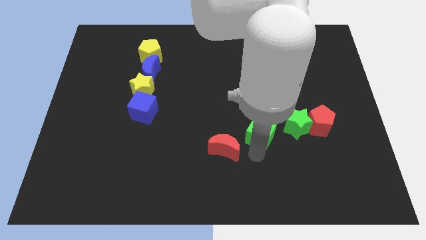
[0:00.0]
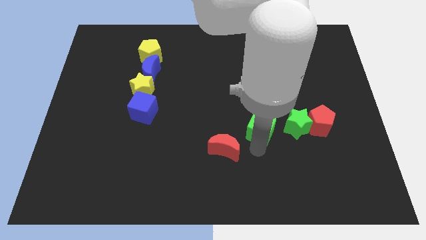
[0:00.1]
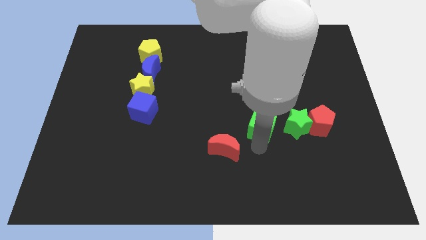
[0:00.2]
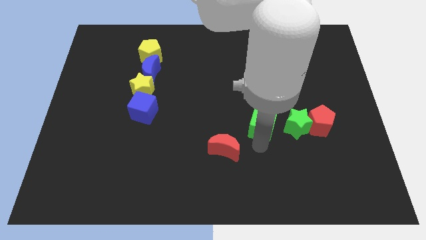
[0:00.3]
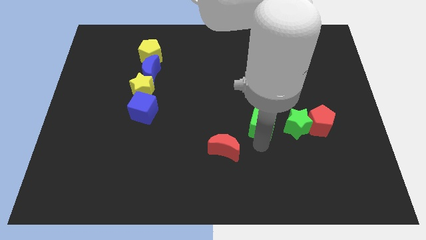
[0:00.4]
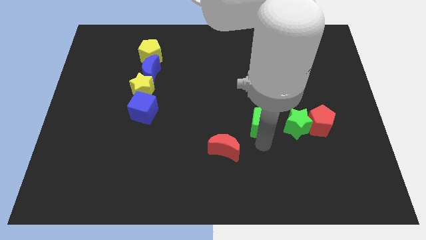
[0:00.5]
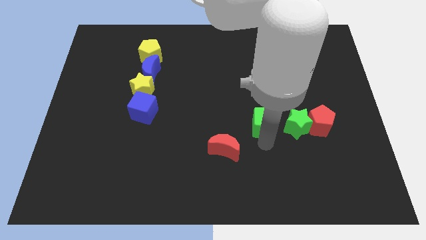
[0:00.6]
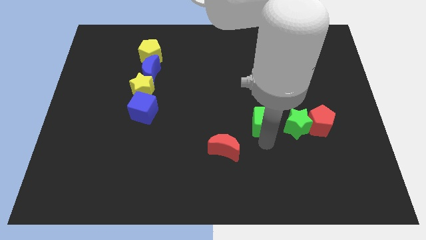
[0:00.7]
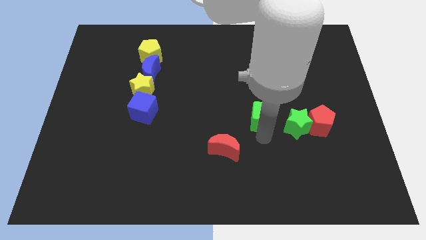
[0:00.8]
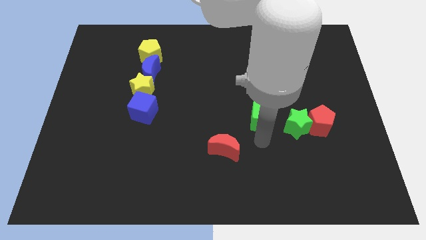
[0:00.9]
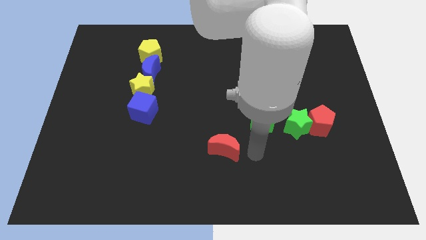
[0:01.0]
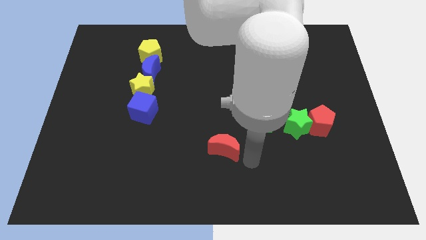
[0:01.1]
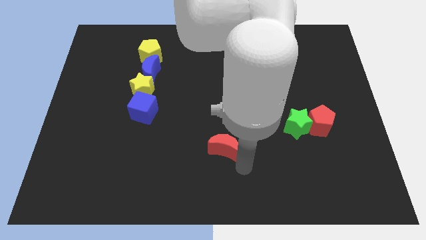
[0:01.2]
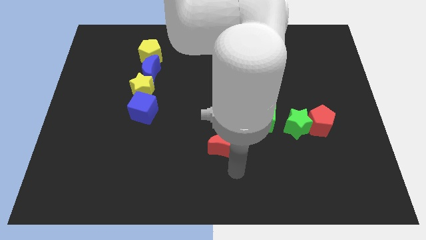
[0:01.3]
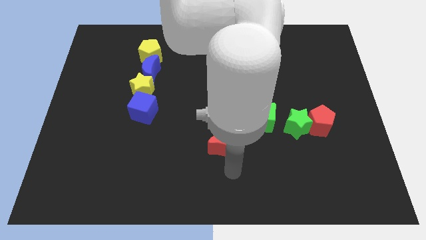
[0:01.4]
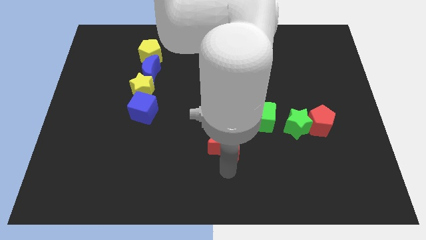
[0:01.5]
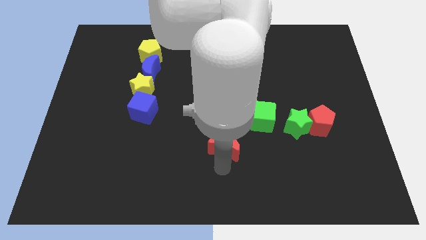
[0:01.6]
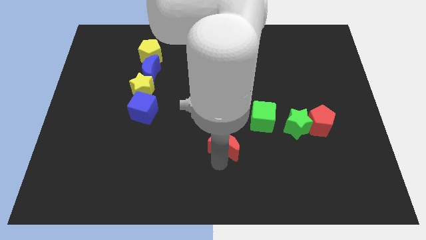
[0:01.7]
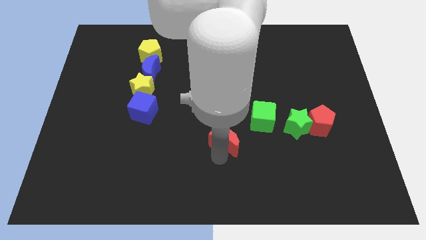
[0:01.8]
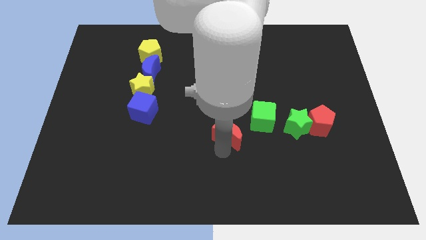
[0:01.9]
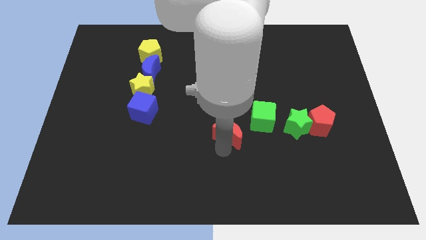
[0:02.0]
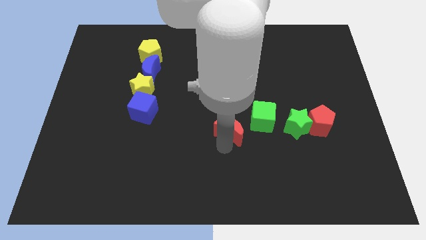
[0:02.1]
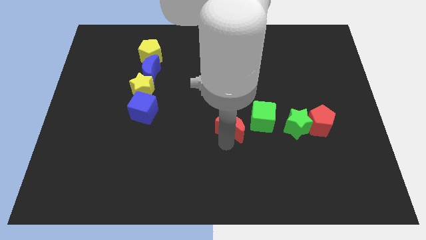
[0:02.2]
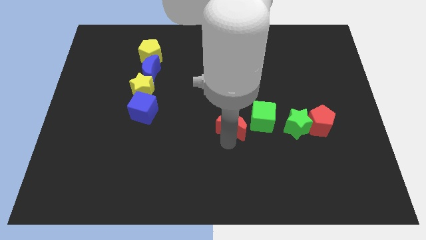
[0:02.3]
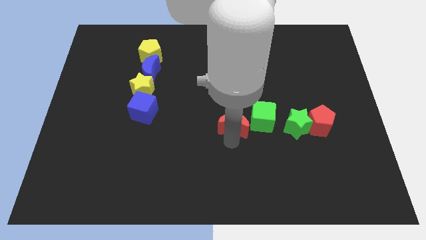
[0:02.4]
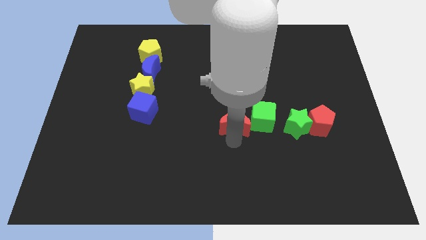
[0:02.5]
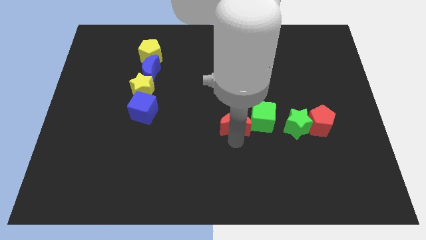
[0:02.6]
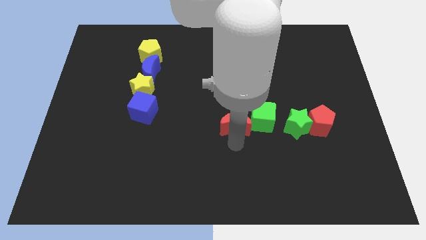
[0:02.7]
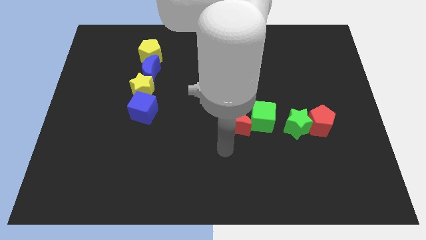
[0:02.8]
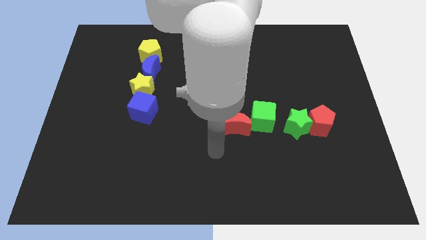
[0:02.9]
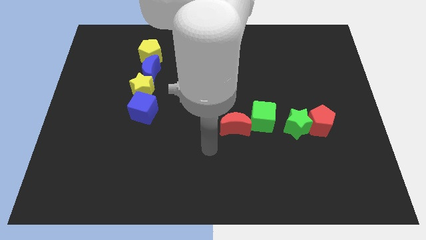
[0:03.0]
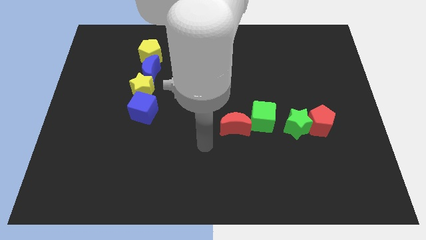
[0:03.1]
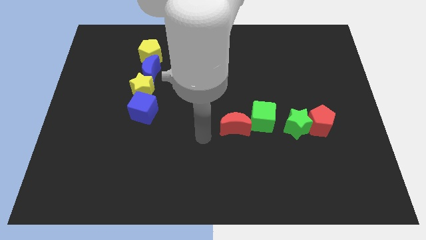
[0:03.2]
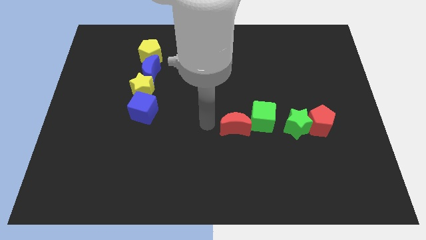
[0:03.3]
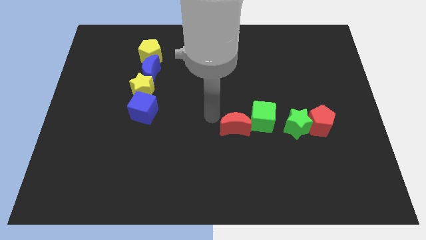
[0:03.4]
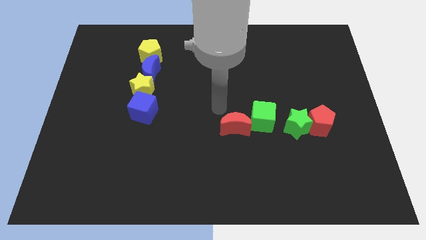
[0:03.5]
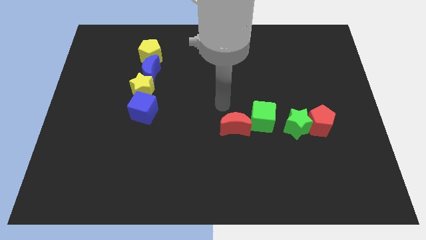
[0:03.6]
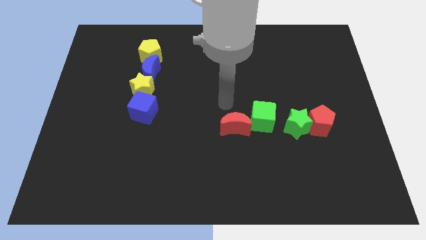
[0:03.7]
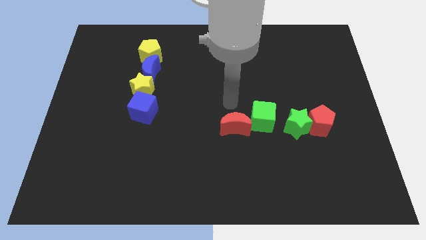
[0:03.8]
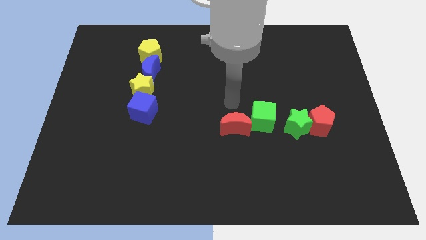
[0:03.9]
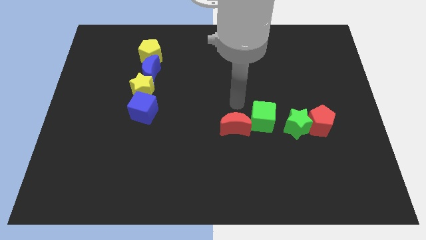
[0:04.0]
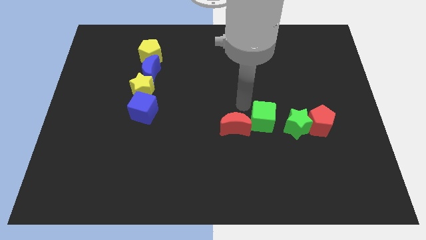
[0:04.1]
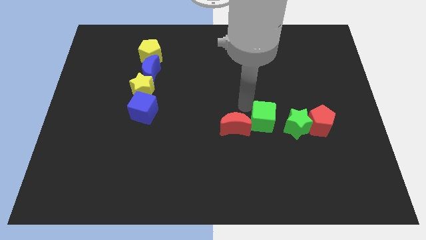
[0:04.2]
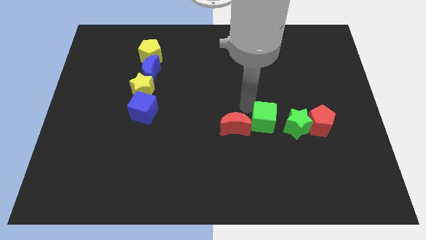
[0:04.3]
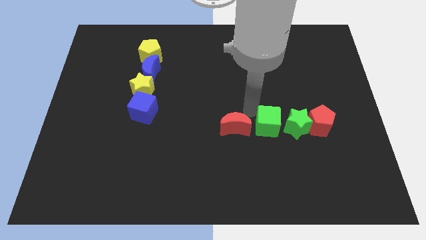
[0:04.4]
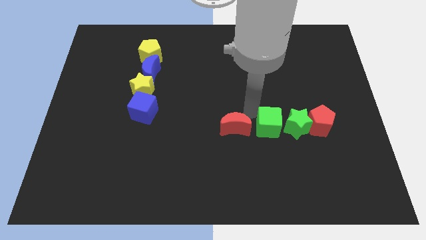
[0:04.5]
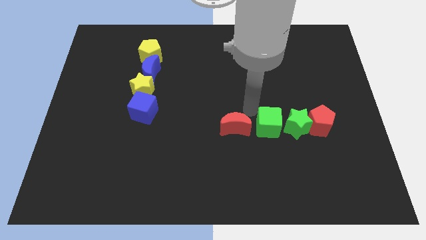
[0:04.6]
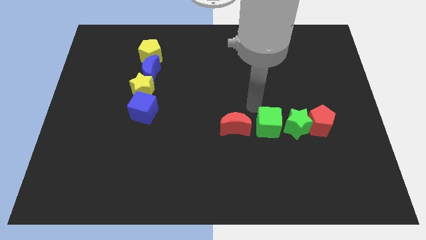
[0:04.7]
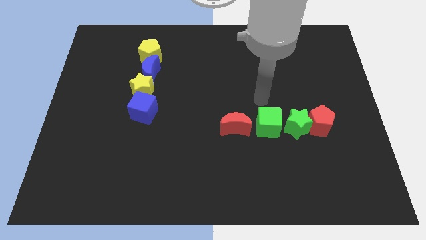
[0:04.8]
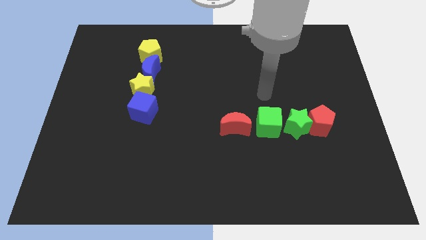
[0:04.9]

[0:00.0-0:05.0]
push the green cube and red moon towards the top side to form a line

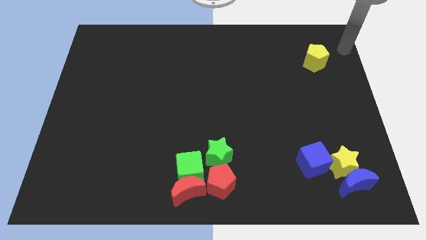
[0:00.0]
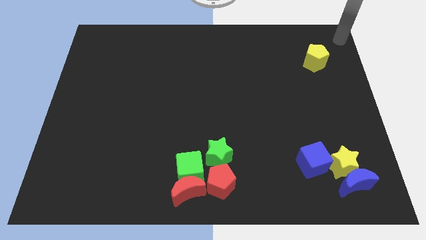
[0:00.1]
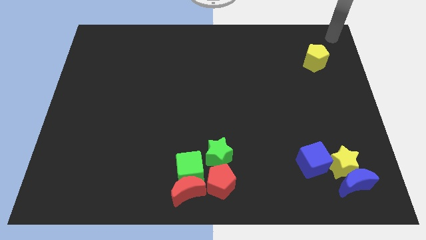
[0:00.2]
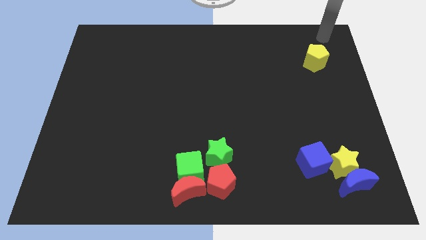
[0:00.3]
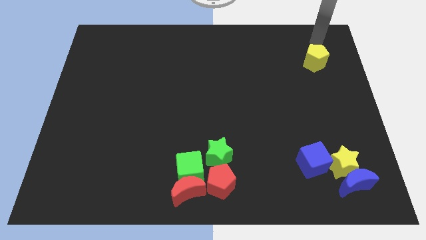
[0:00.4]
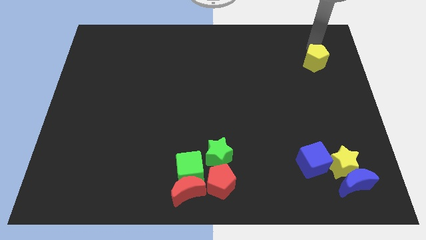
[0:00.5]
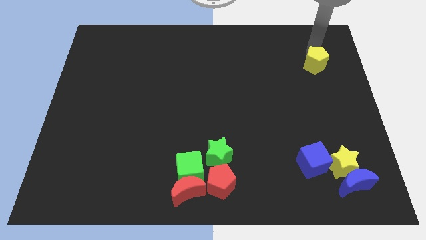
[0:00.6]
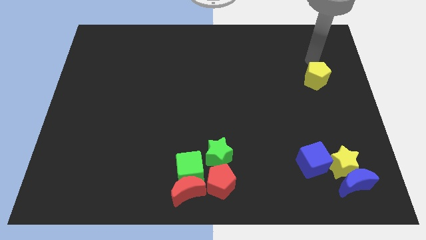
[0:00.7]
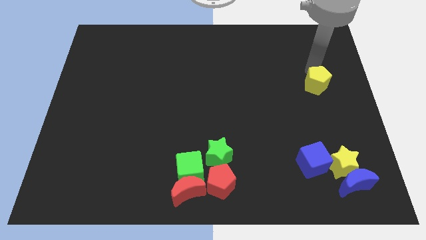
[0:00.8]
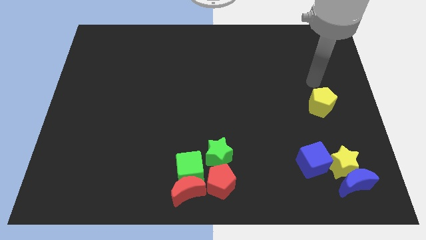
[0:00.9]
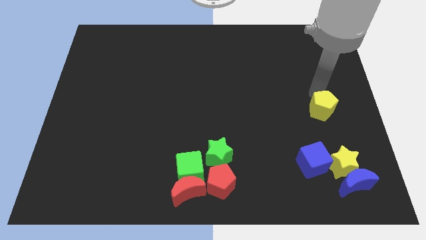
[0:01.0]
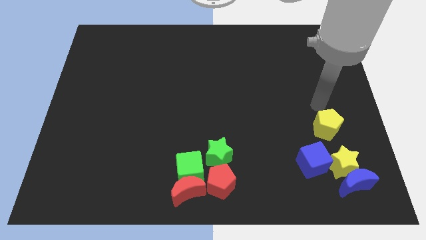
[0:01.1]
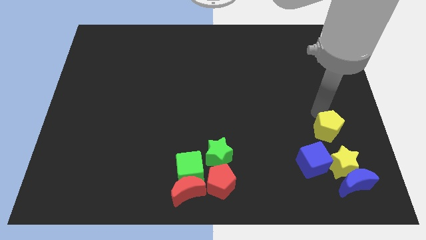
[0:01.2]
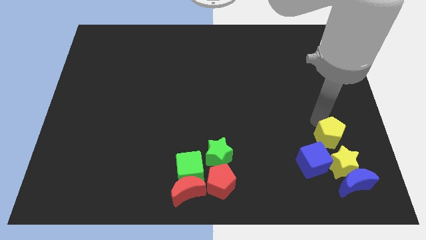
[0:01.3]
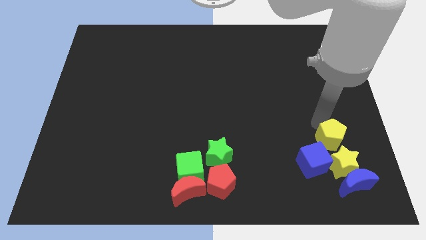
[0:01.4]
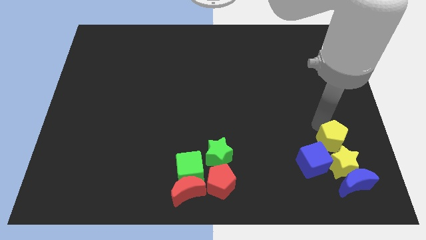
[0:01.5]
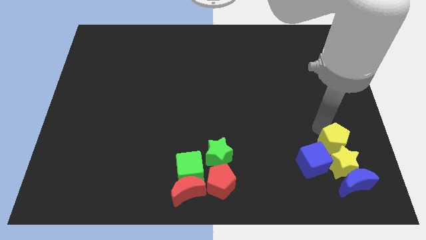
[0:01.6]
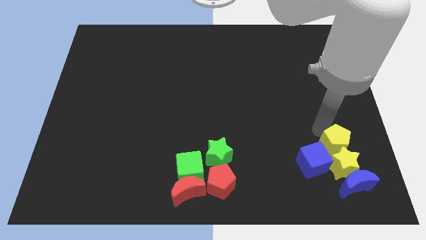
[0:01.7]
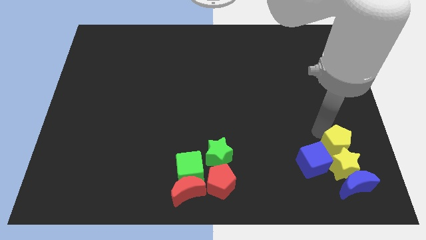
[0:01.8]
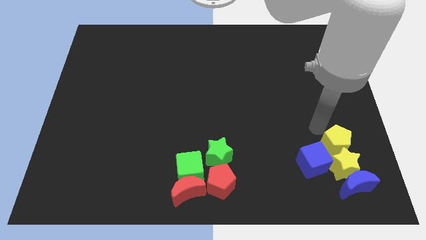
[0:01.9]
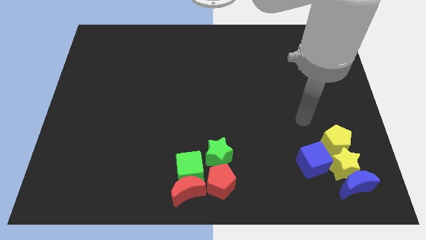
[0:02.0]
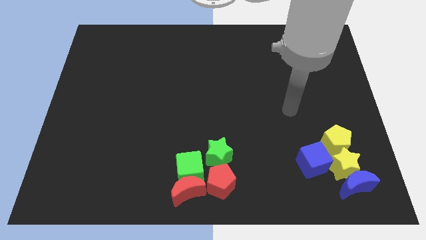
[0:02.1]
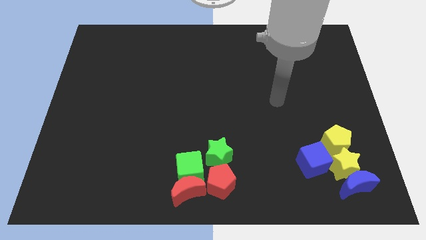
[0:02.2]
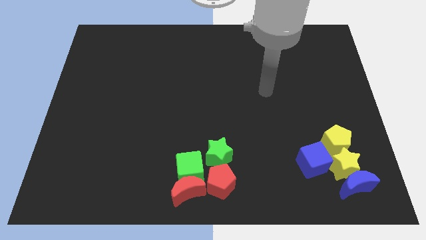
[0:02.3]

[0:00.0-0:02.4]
push the yellow block near the yellow star

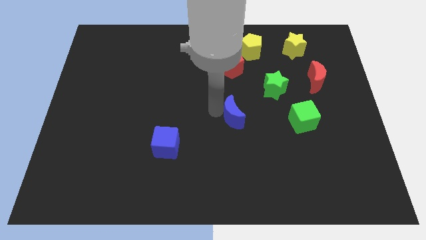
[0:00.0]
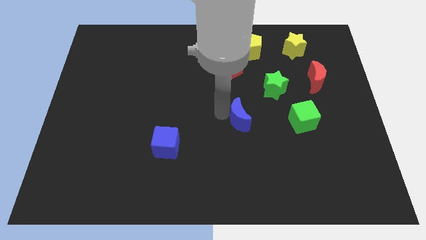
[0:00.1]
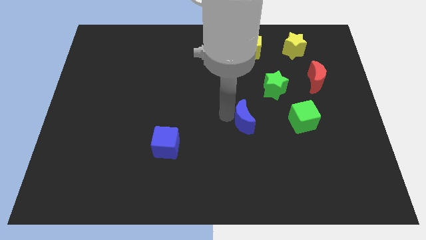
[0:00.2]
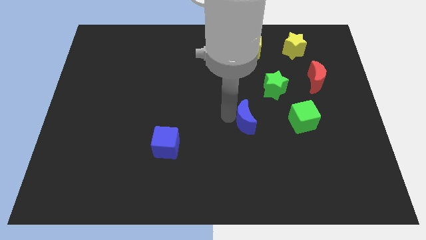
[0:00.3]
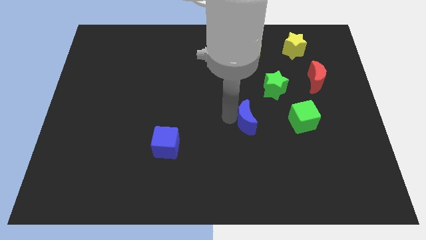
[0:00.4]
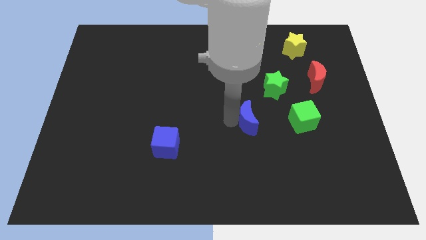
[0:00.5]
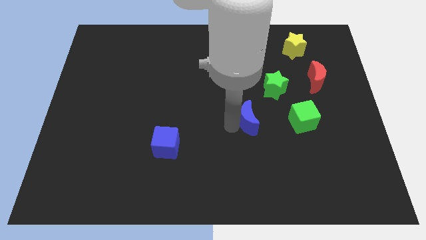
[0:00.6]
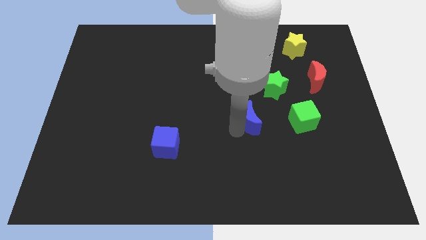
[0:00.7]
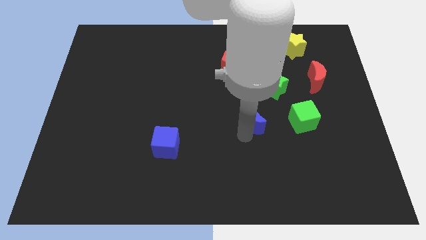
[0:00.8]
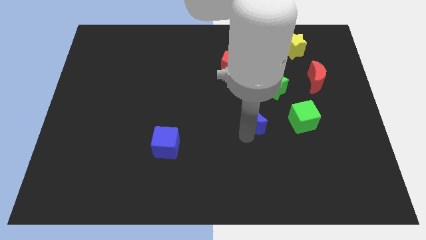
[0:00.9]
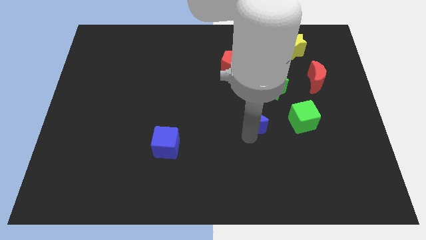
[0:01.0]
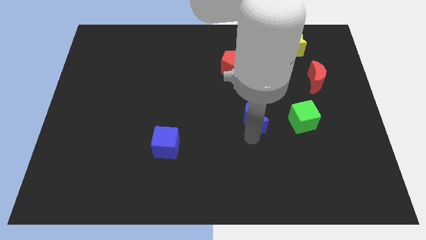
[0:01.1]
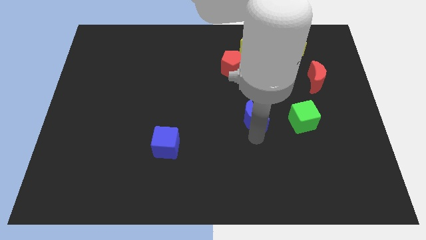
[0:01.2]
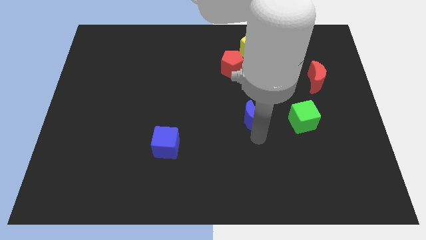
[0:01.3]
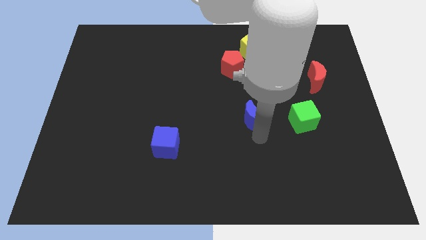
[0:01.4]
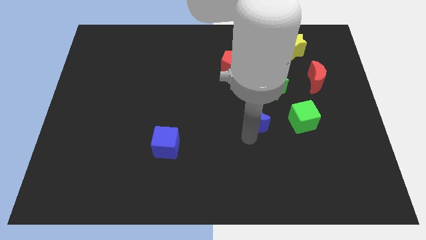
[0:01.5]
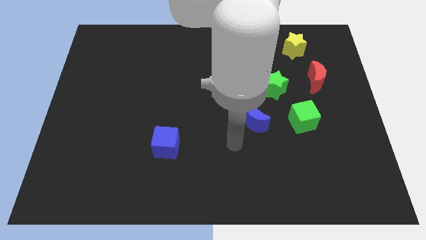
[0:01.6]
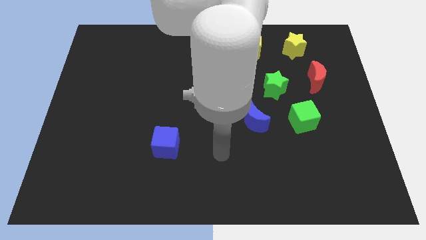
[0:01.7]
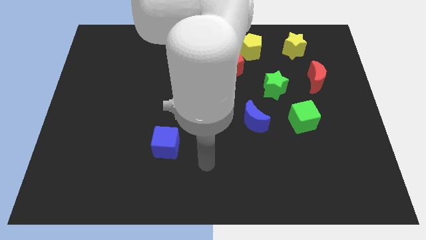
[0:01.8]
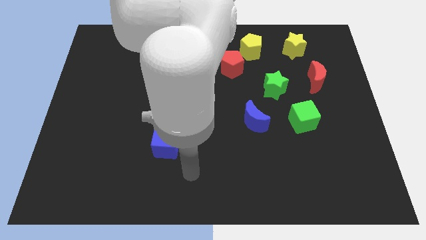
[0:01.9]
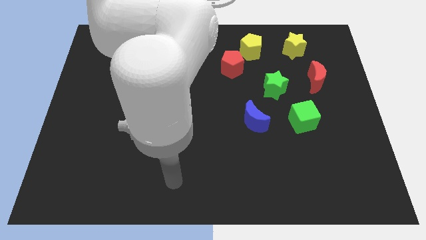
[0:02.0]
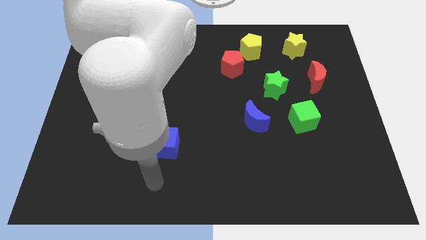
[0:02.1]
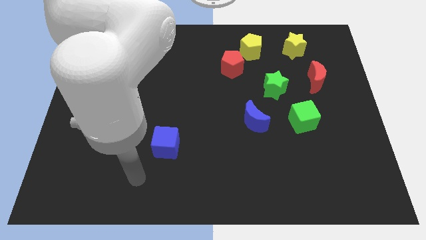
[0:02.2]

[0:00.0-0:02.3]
move the arm towards the bottom of the blue cube
